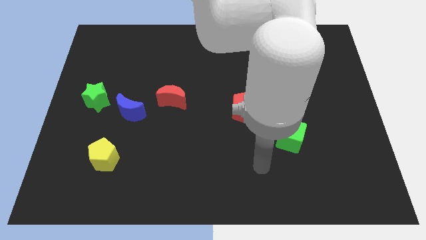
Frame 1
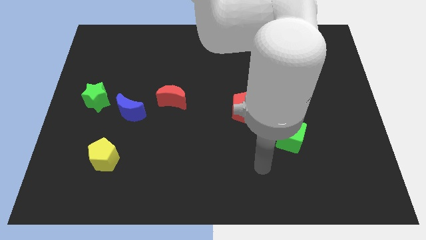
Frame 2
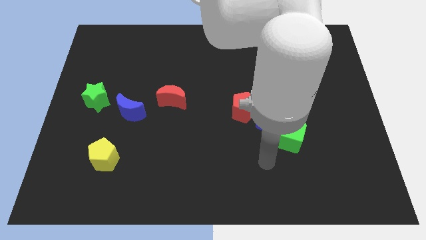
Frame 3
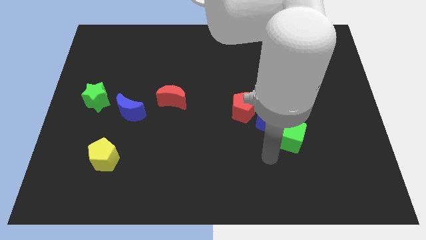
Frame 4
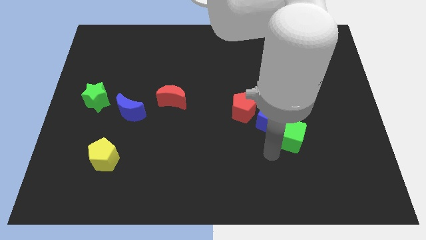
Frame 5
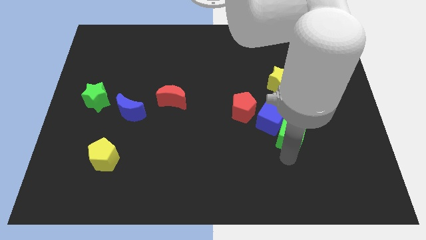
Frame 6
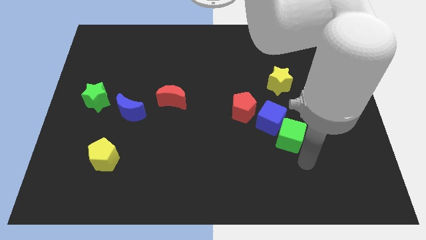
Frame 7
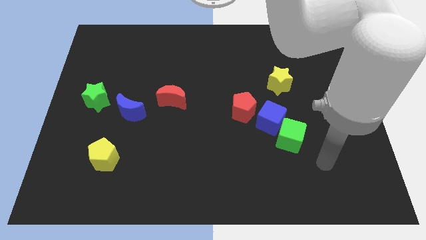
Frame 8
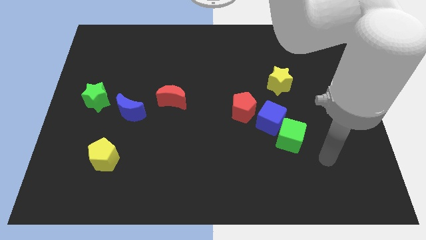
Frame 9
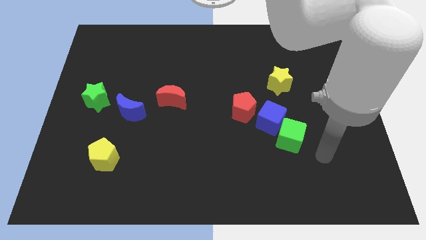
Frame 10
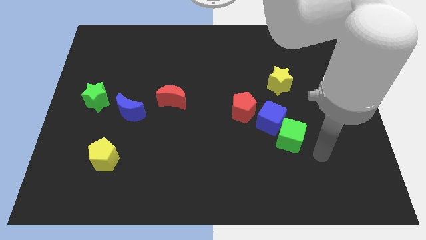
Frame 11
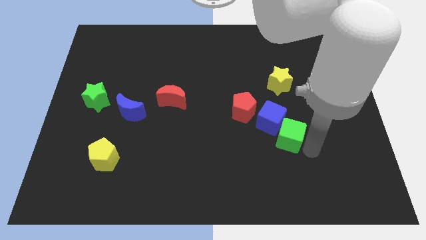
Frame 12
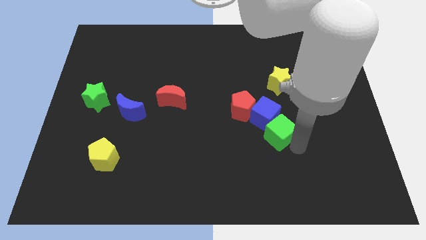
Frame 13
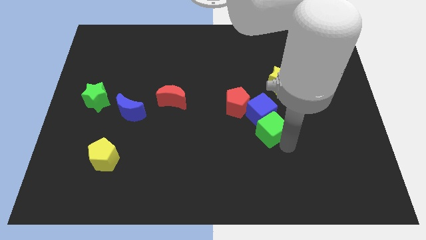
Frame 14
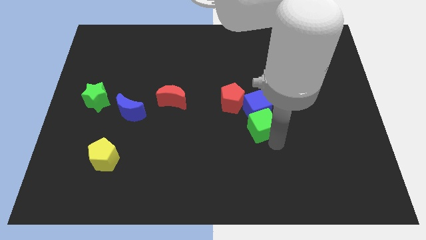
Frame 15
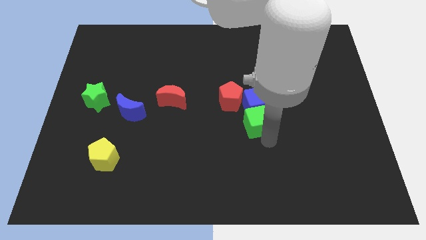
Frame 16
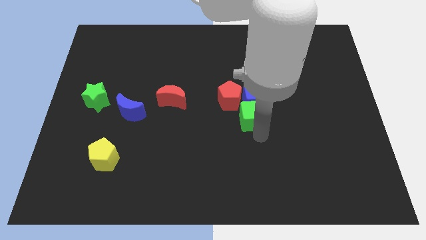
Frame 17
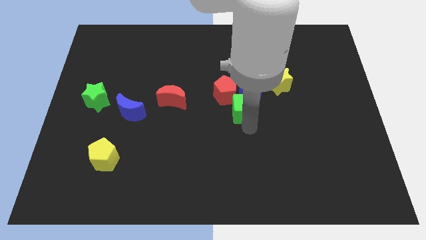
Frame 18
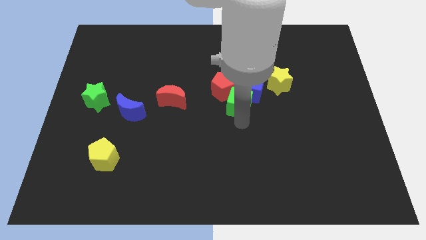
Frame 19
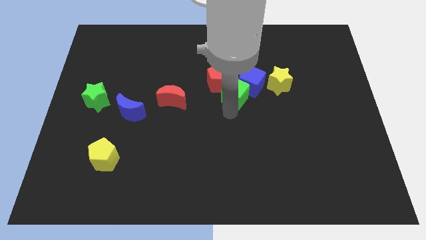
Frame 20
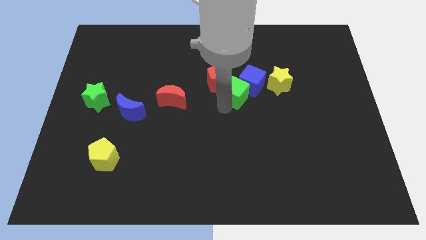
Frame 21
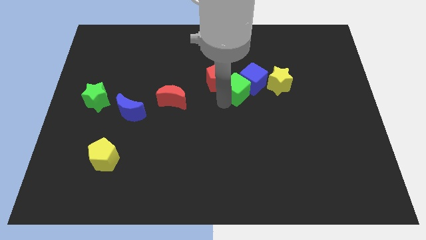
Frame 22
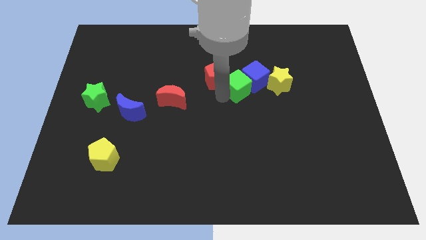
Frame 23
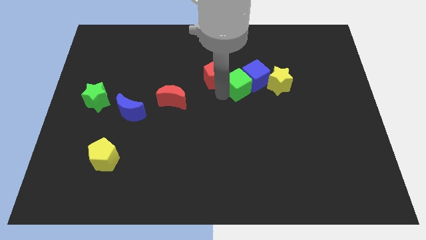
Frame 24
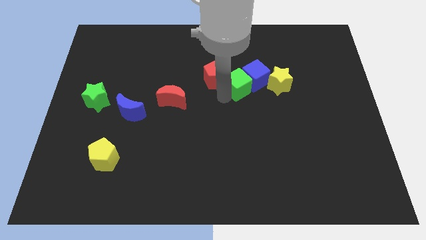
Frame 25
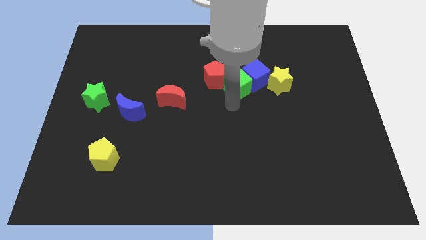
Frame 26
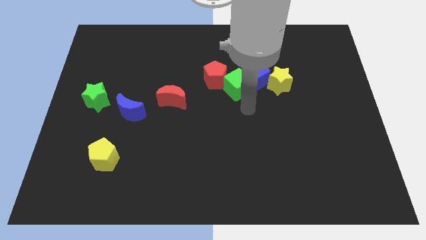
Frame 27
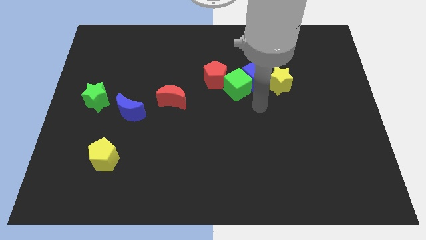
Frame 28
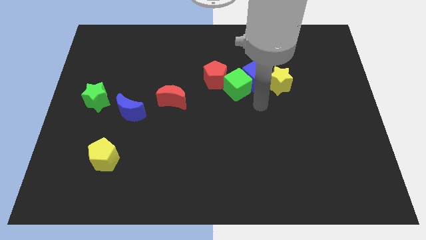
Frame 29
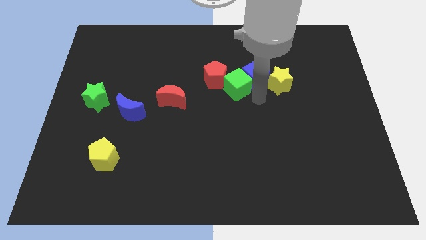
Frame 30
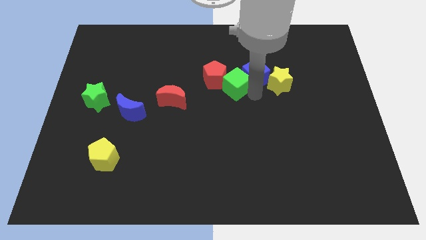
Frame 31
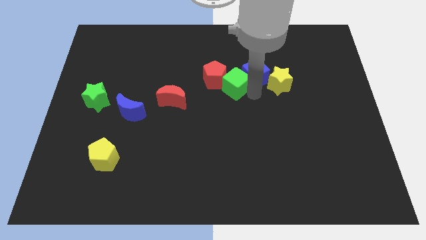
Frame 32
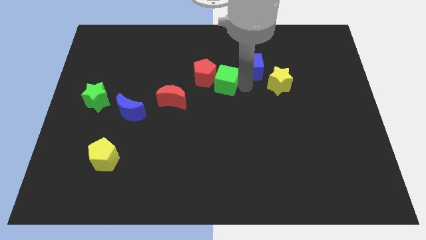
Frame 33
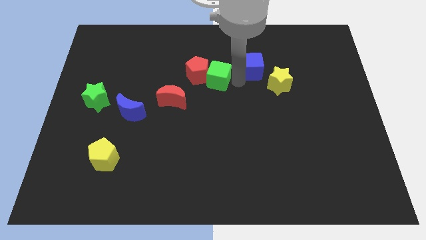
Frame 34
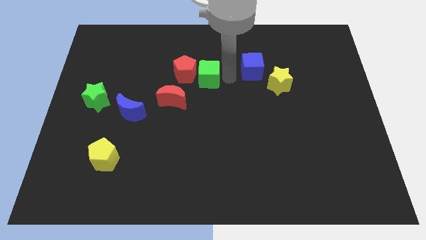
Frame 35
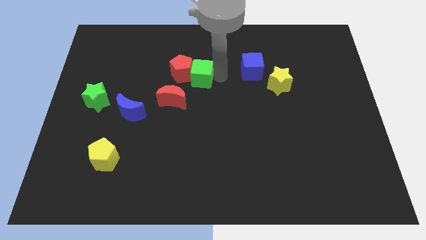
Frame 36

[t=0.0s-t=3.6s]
move the green cube and red pentagon to the center

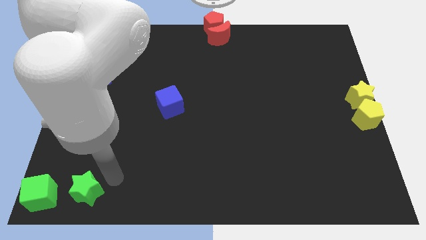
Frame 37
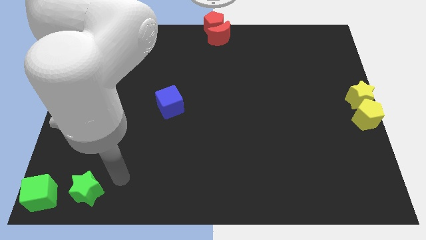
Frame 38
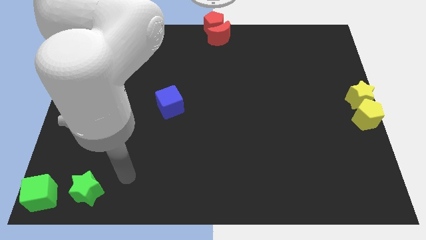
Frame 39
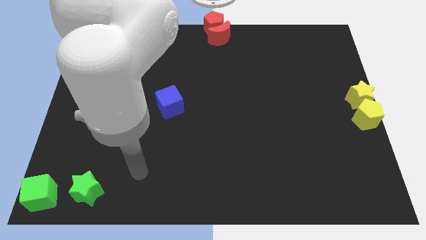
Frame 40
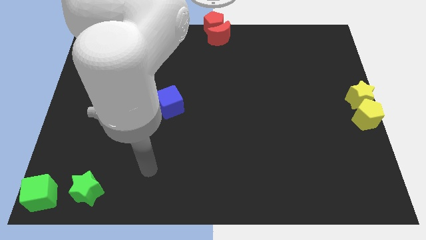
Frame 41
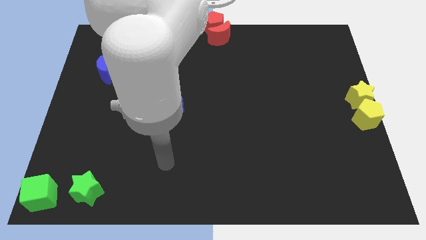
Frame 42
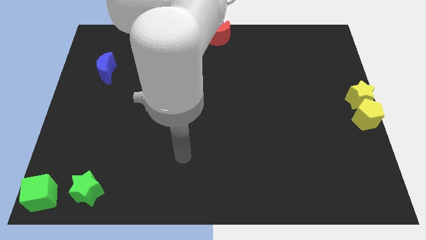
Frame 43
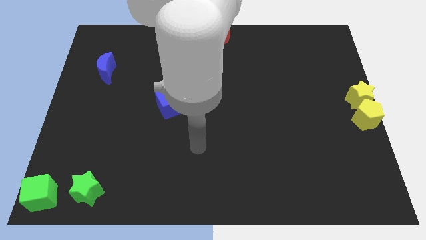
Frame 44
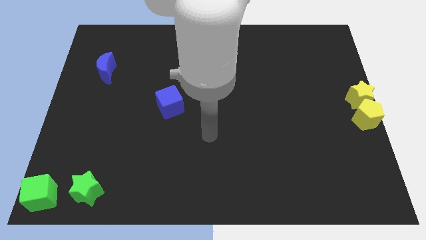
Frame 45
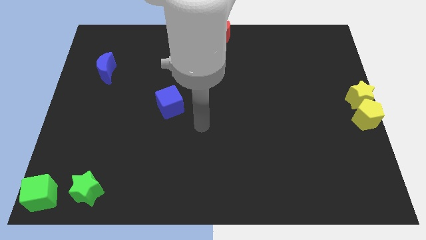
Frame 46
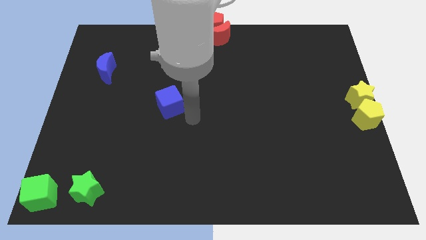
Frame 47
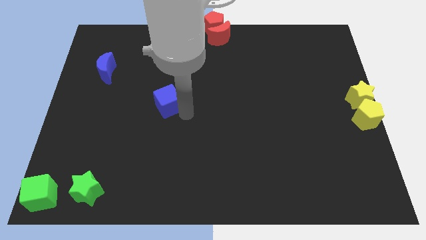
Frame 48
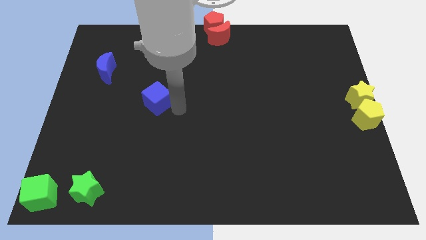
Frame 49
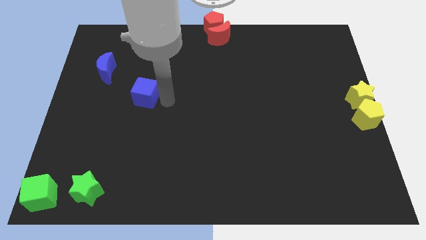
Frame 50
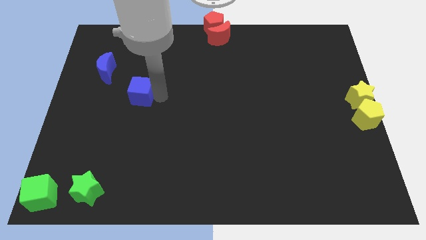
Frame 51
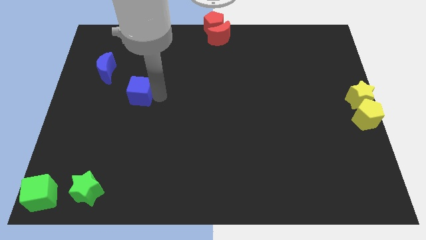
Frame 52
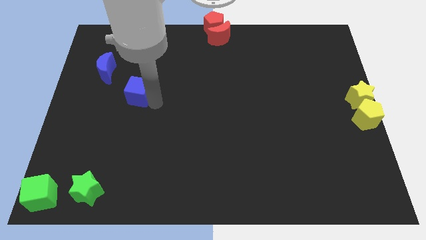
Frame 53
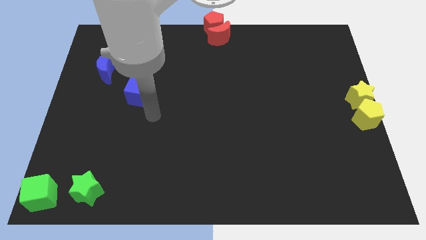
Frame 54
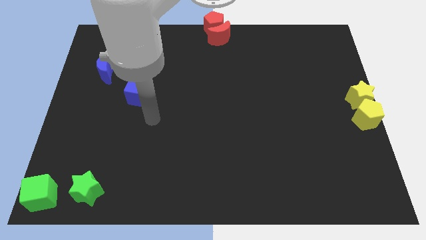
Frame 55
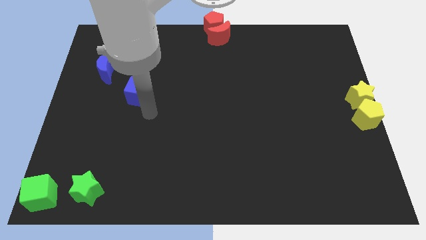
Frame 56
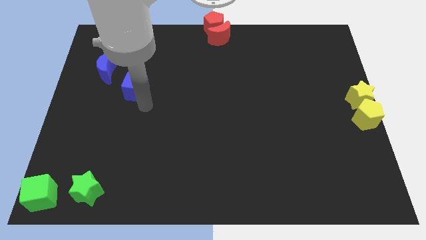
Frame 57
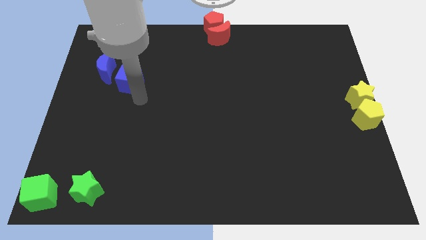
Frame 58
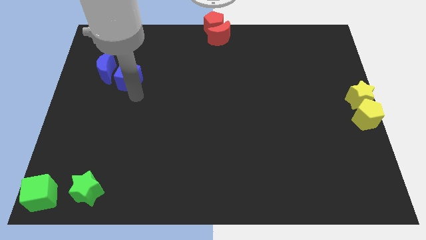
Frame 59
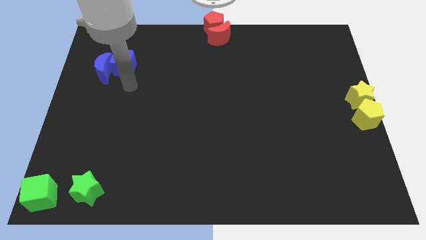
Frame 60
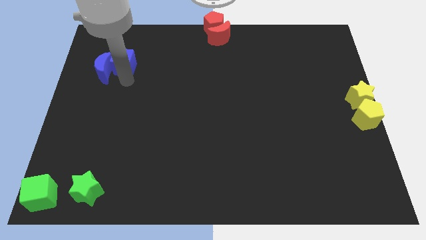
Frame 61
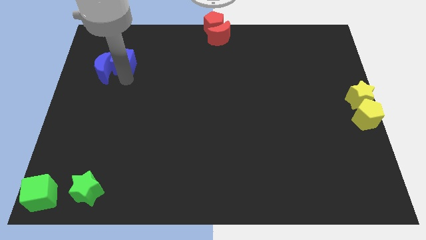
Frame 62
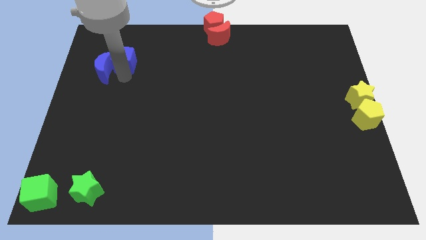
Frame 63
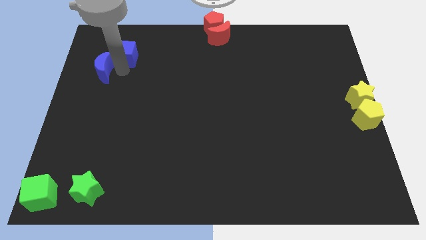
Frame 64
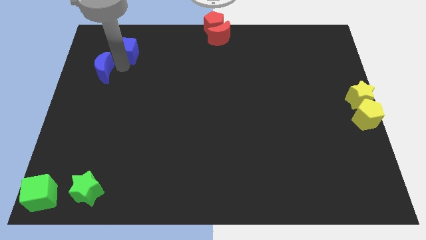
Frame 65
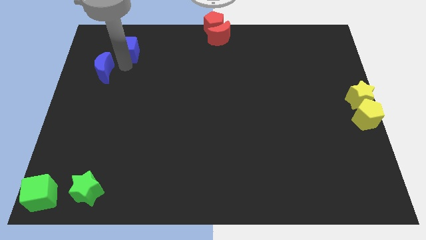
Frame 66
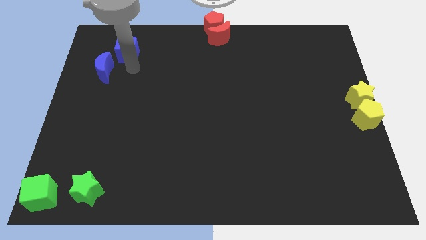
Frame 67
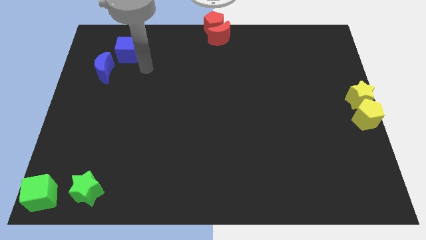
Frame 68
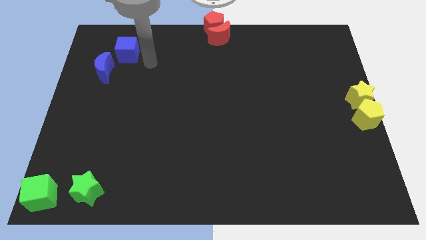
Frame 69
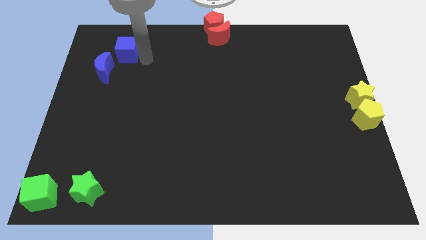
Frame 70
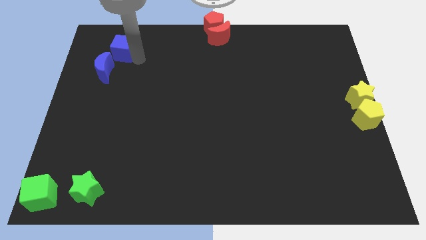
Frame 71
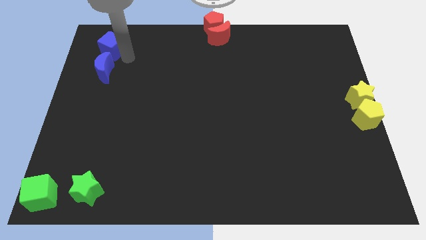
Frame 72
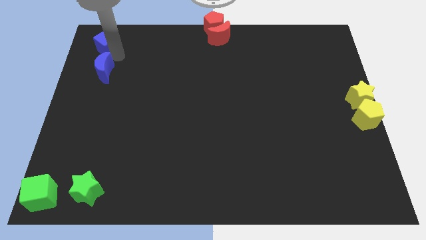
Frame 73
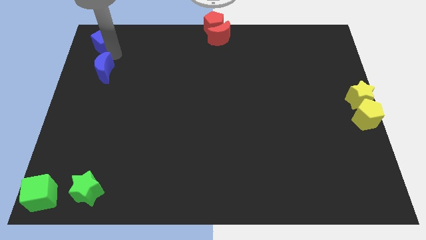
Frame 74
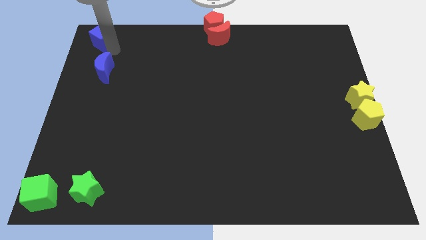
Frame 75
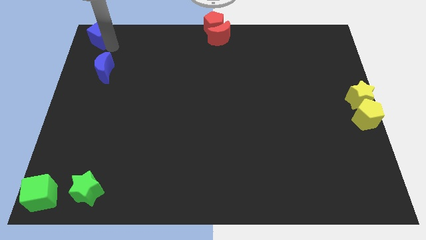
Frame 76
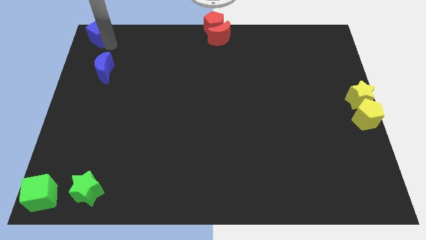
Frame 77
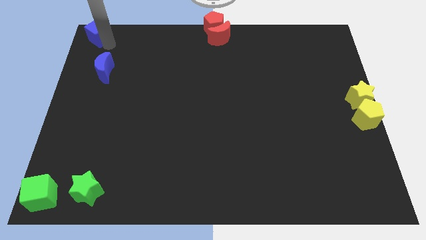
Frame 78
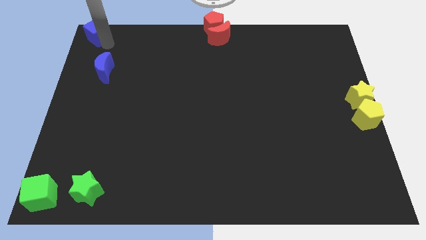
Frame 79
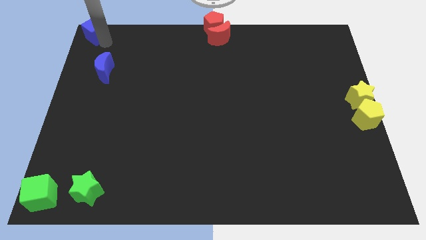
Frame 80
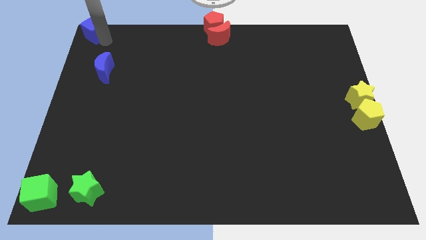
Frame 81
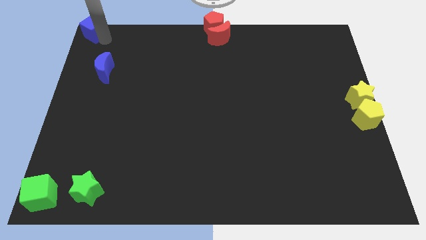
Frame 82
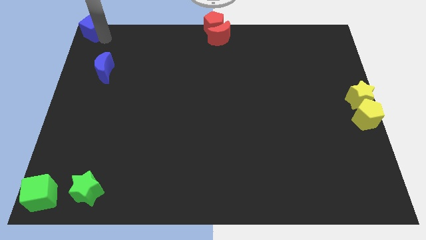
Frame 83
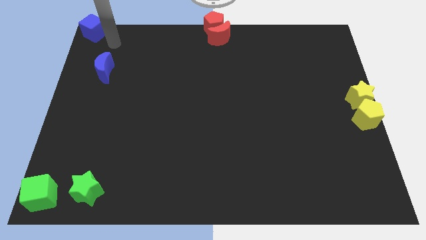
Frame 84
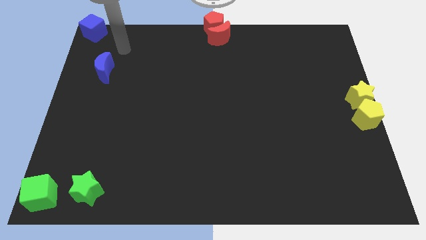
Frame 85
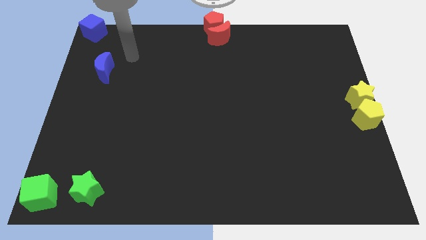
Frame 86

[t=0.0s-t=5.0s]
place the blue cube at the top left corner of the board

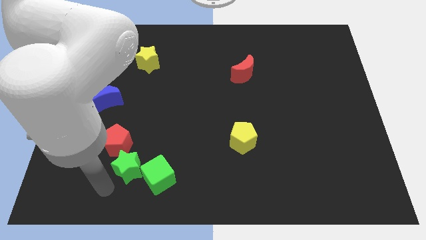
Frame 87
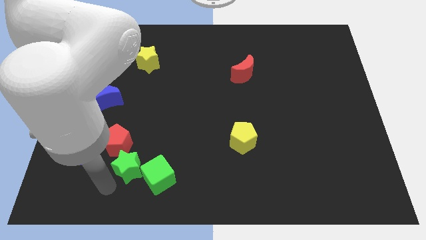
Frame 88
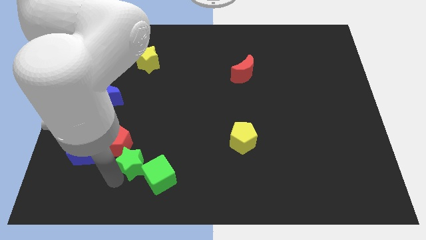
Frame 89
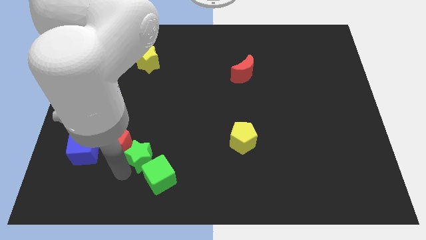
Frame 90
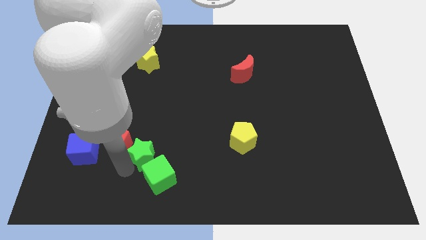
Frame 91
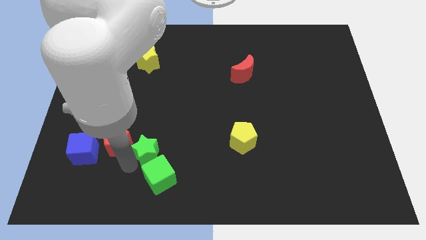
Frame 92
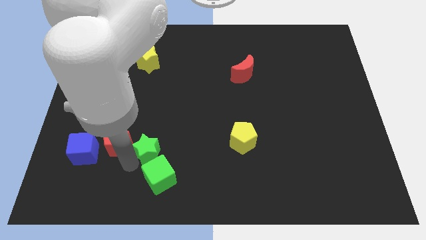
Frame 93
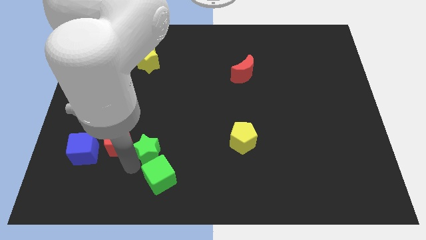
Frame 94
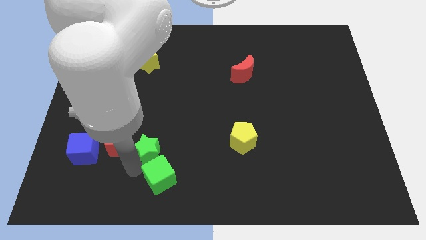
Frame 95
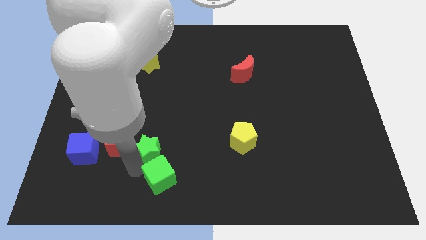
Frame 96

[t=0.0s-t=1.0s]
move green star above green cube
